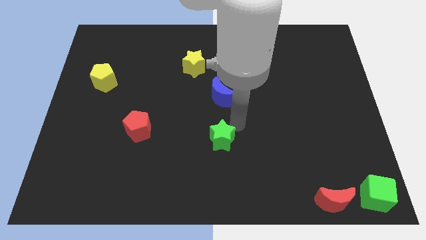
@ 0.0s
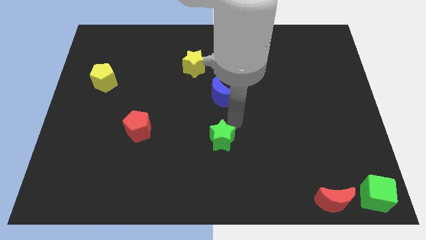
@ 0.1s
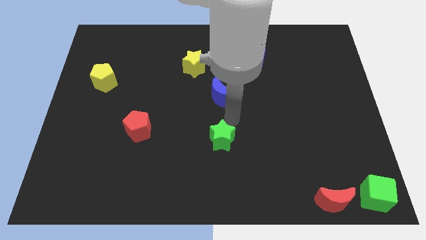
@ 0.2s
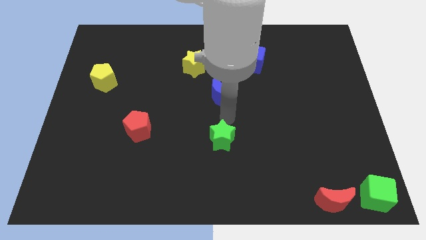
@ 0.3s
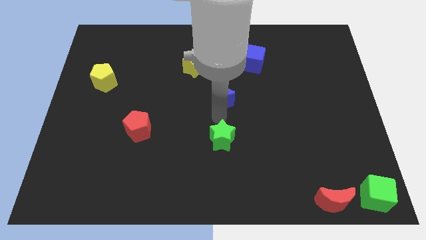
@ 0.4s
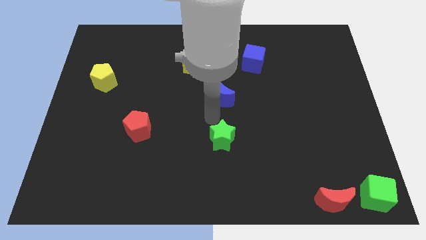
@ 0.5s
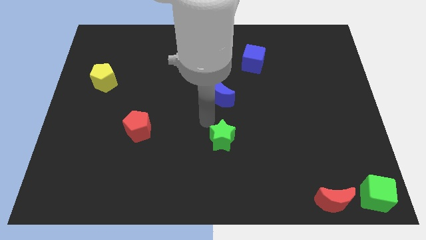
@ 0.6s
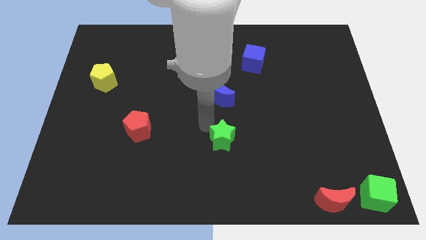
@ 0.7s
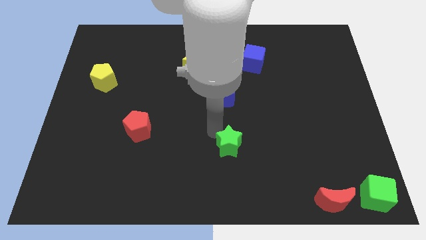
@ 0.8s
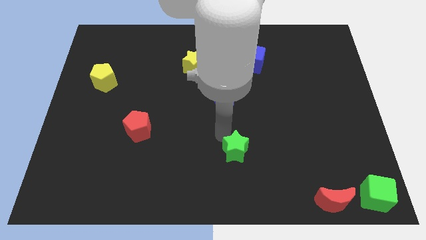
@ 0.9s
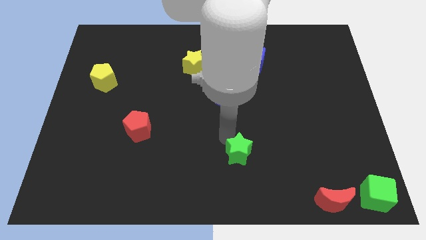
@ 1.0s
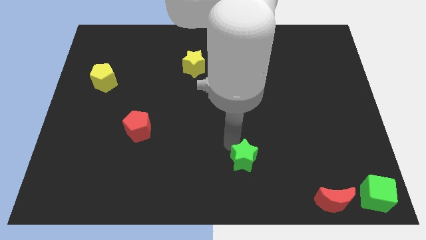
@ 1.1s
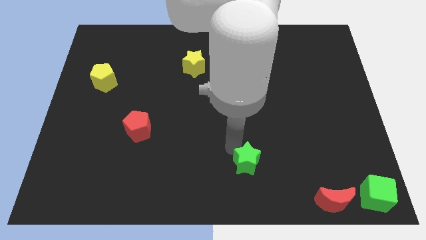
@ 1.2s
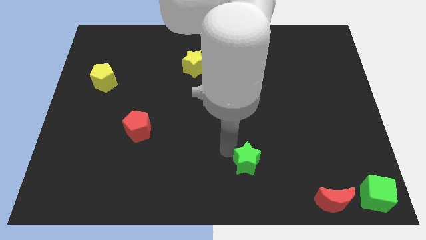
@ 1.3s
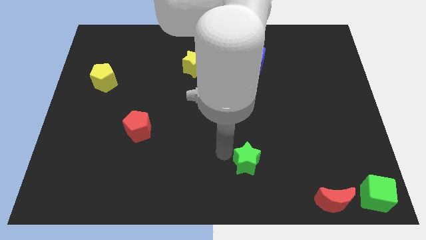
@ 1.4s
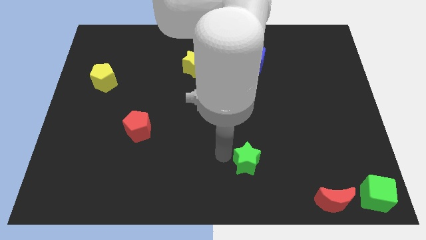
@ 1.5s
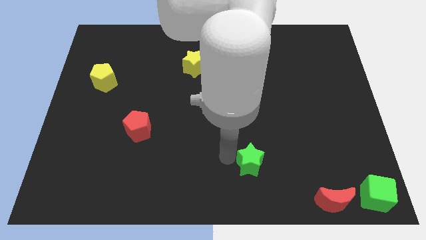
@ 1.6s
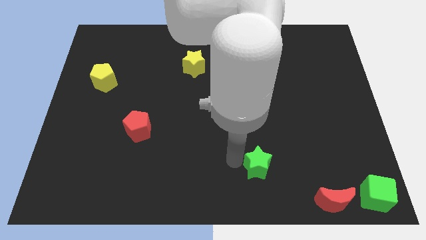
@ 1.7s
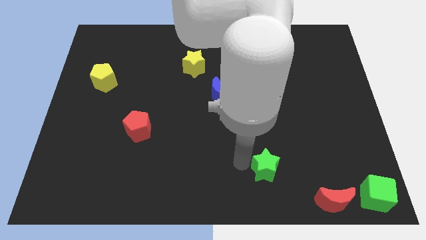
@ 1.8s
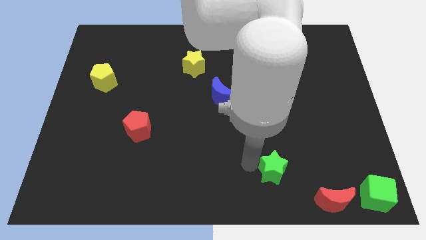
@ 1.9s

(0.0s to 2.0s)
push the green star towards the red moon

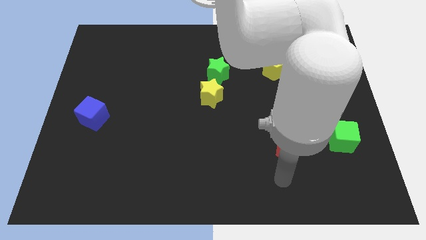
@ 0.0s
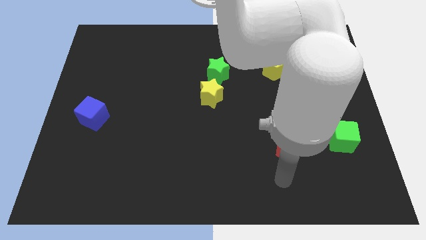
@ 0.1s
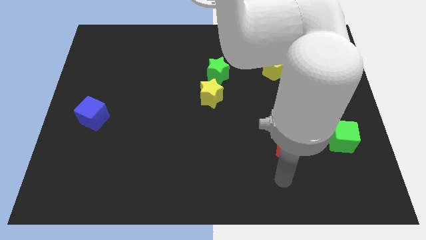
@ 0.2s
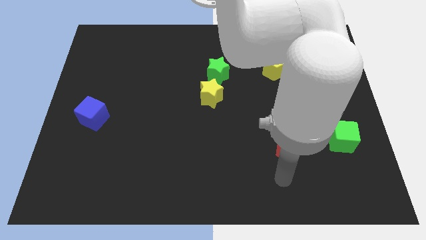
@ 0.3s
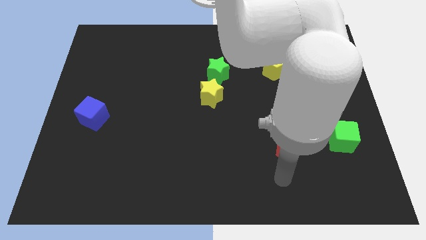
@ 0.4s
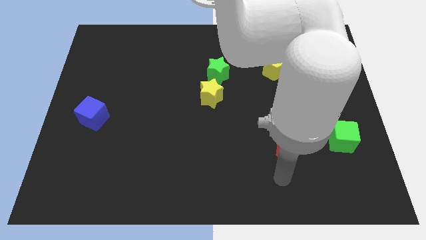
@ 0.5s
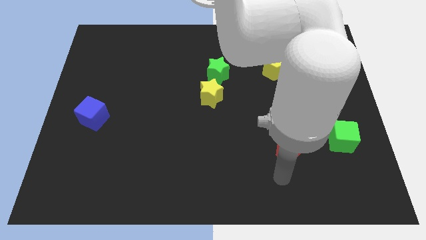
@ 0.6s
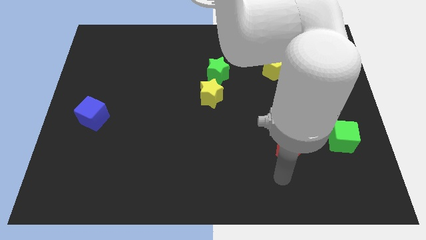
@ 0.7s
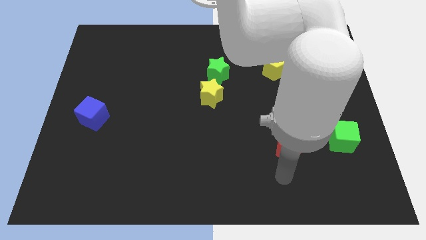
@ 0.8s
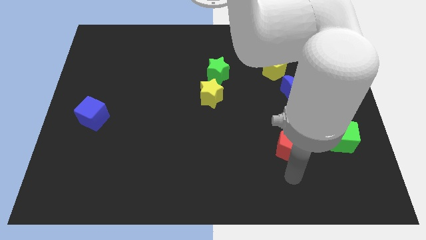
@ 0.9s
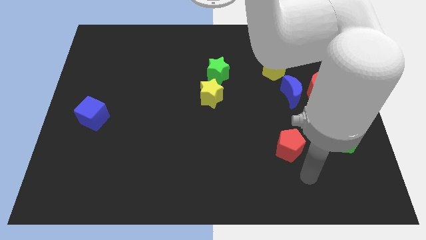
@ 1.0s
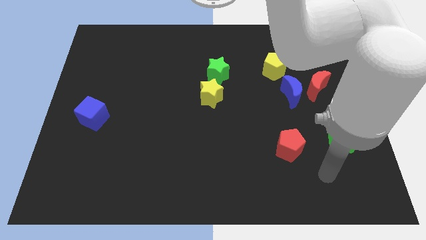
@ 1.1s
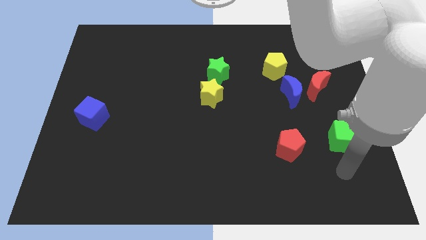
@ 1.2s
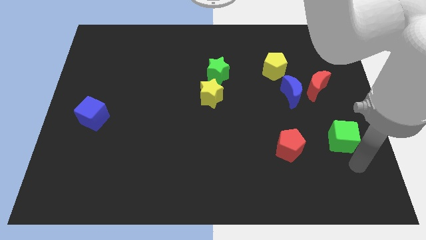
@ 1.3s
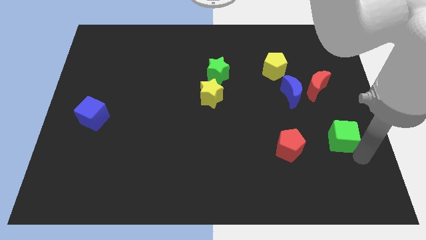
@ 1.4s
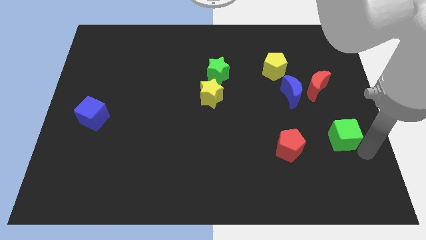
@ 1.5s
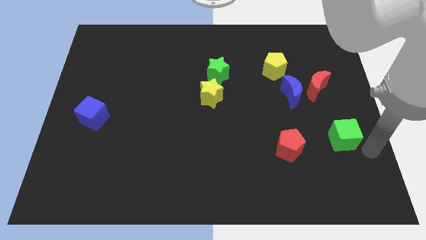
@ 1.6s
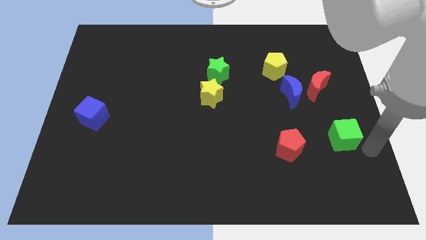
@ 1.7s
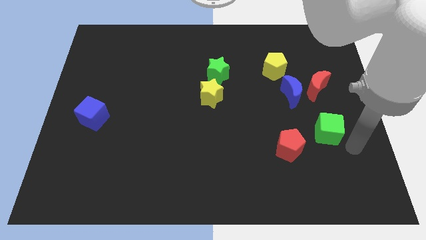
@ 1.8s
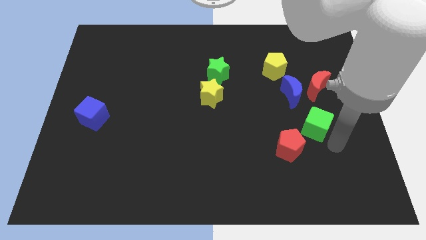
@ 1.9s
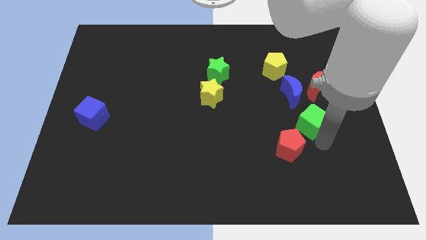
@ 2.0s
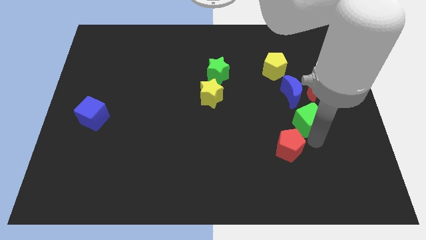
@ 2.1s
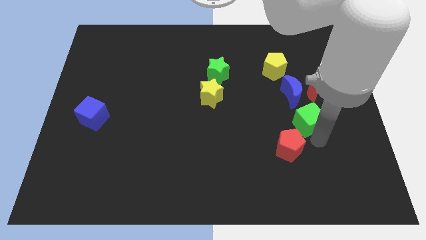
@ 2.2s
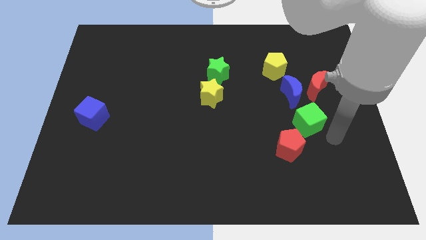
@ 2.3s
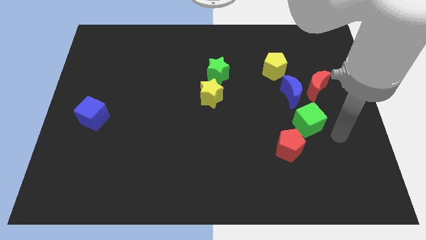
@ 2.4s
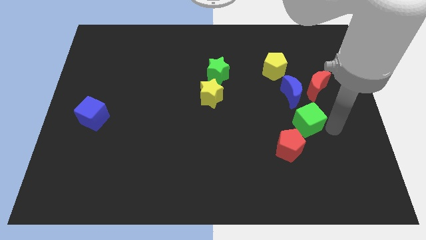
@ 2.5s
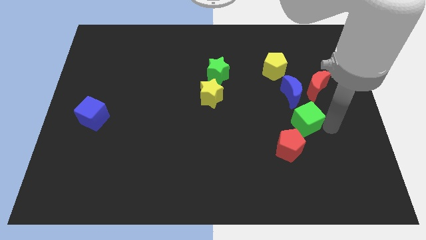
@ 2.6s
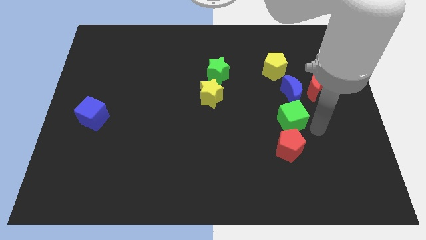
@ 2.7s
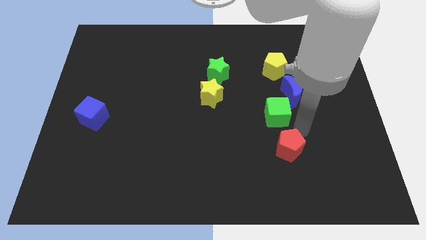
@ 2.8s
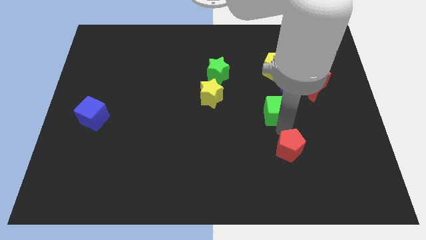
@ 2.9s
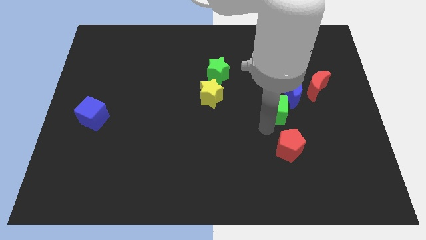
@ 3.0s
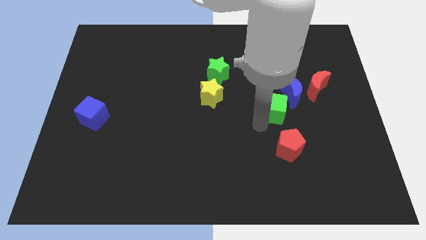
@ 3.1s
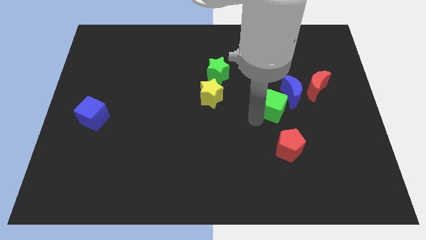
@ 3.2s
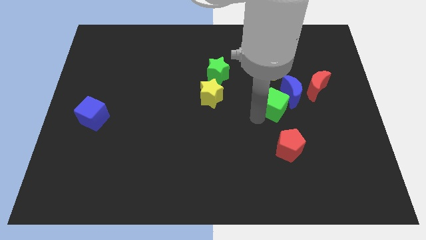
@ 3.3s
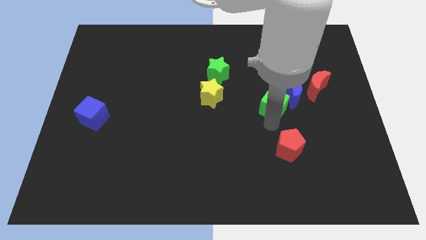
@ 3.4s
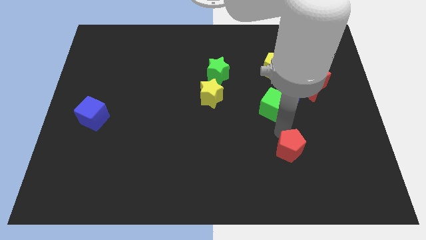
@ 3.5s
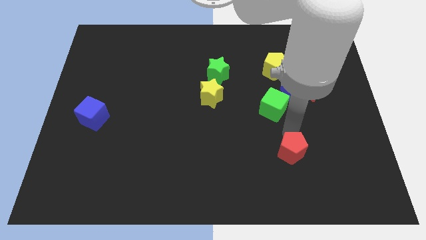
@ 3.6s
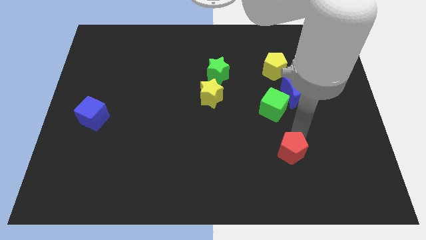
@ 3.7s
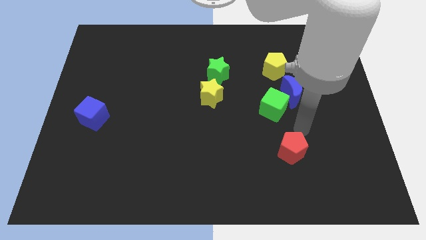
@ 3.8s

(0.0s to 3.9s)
put the green cube below the yellow pentagon

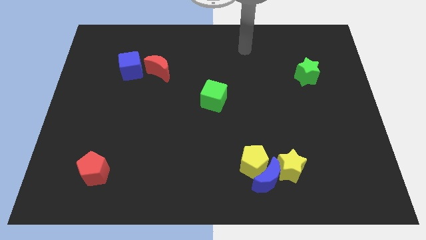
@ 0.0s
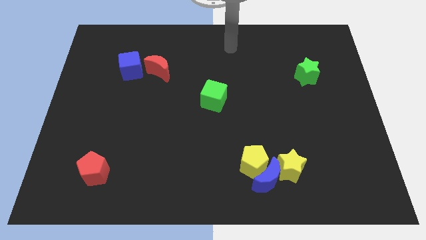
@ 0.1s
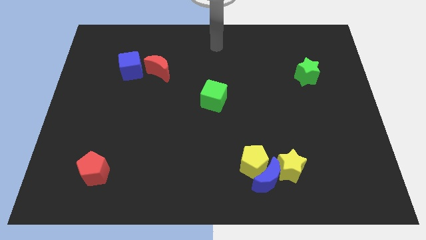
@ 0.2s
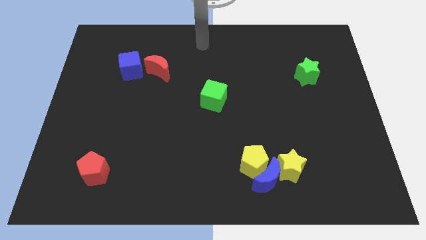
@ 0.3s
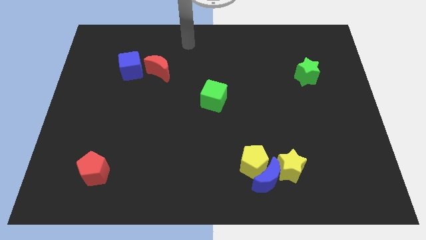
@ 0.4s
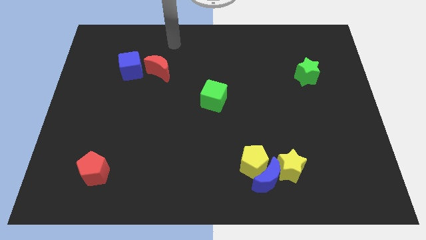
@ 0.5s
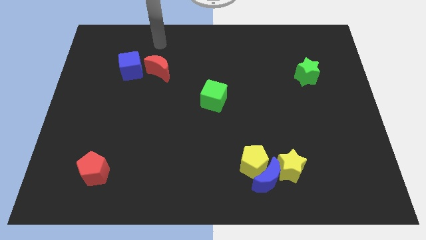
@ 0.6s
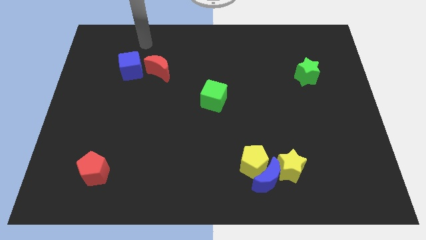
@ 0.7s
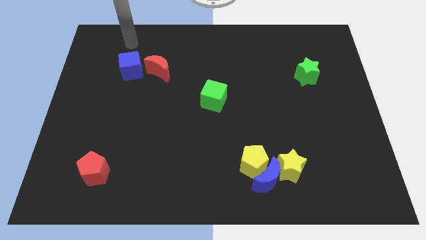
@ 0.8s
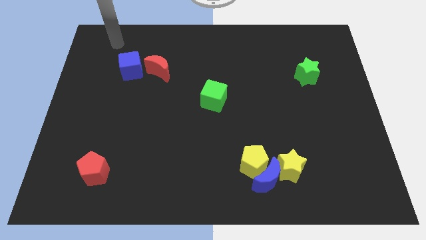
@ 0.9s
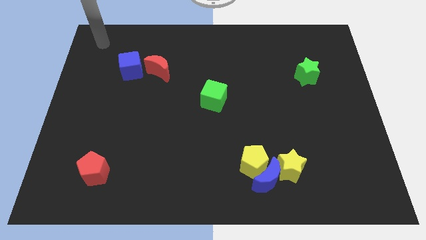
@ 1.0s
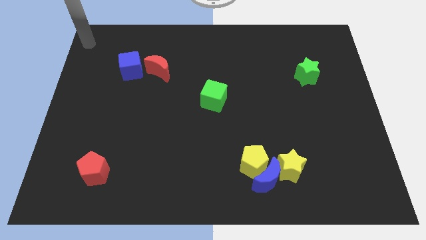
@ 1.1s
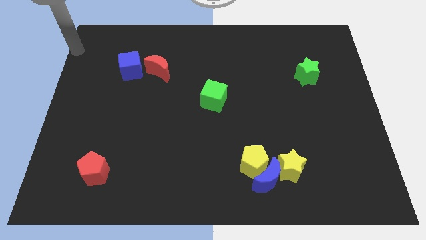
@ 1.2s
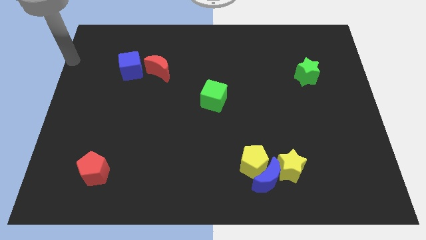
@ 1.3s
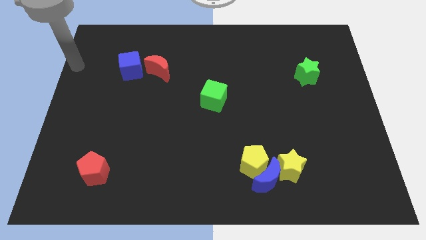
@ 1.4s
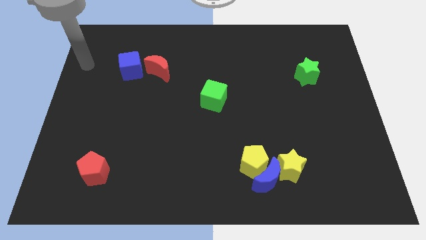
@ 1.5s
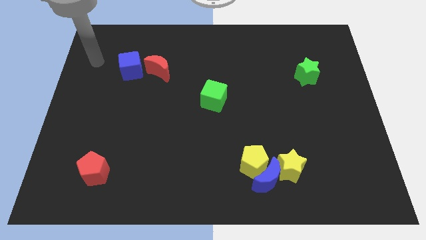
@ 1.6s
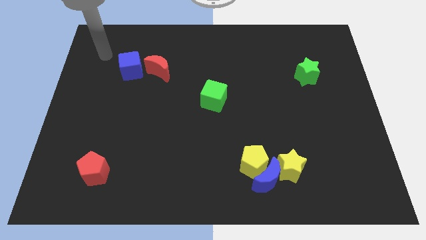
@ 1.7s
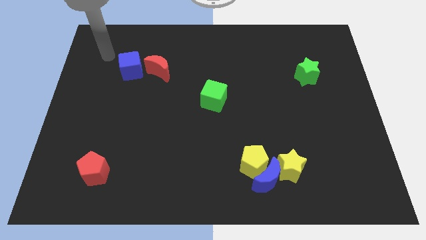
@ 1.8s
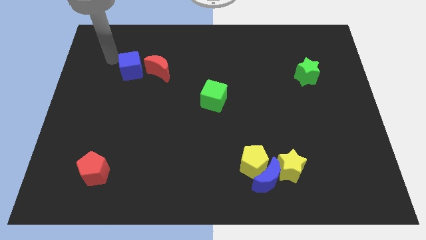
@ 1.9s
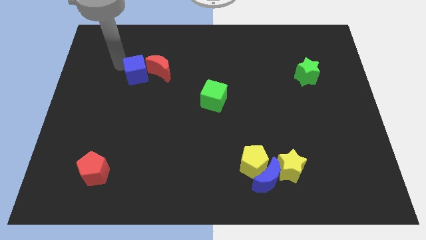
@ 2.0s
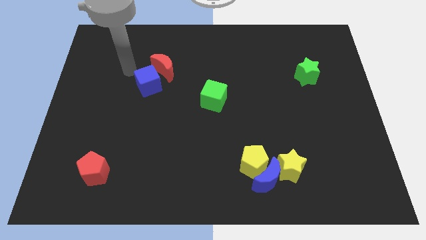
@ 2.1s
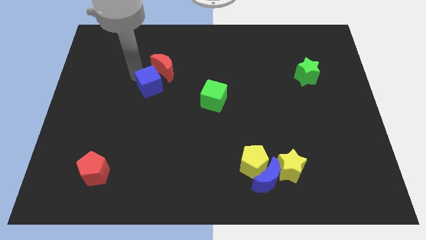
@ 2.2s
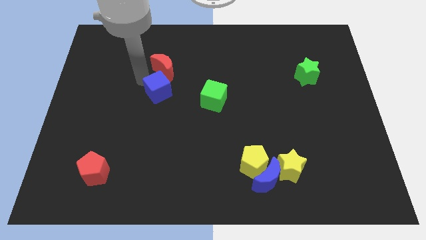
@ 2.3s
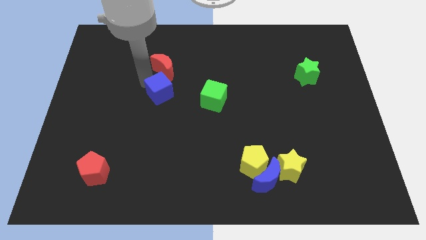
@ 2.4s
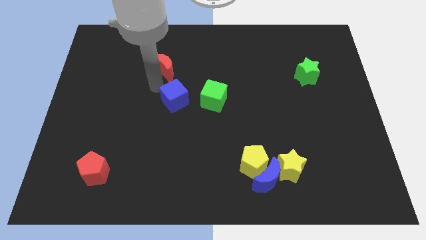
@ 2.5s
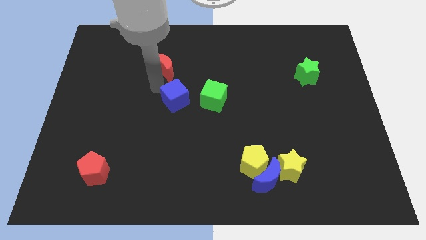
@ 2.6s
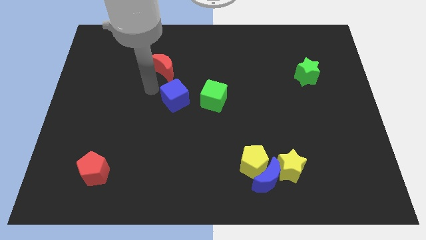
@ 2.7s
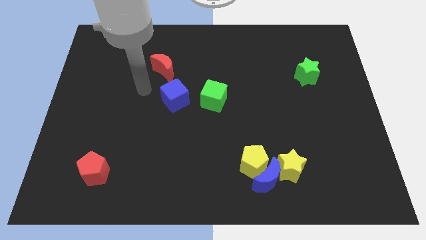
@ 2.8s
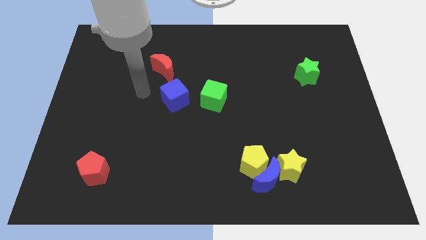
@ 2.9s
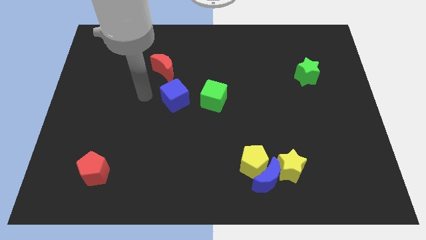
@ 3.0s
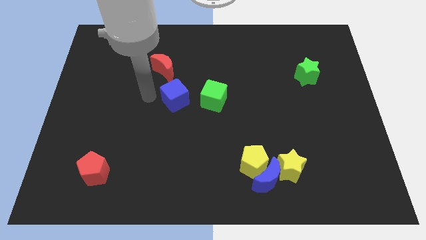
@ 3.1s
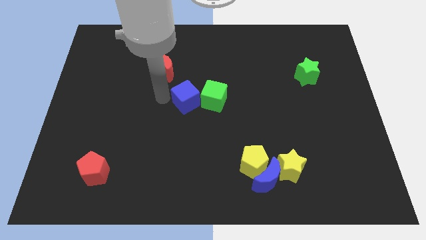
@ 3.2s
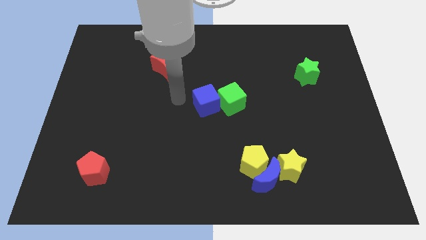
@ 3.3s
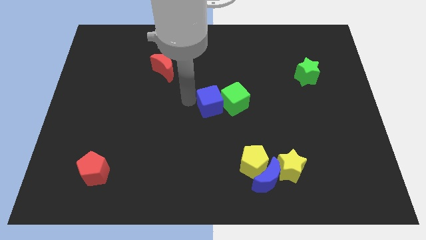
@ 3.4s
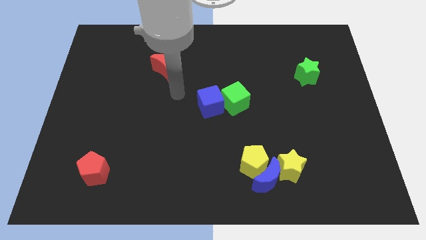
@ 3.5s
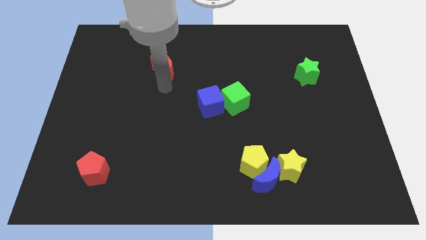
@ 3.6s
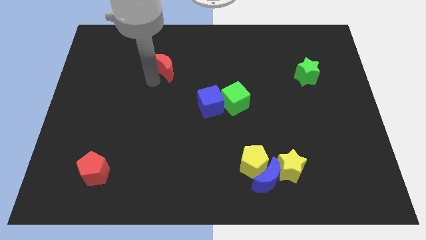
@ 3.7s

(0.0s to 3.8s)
push the blue cube into the green cube
